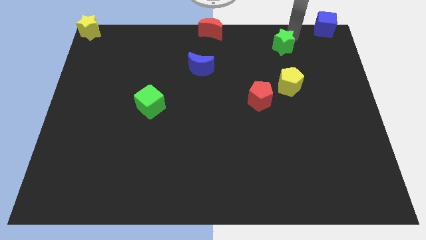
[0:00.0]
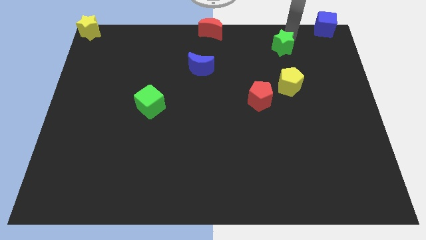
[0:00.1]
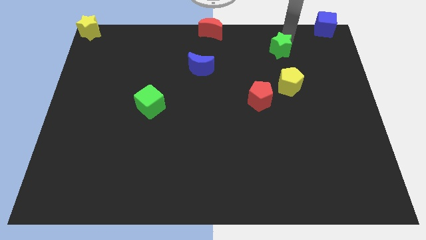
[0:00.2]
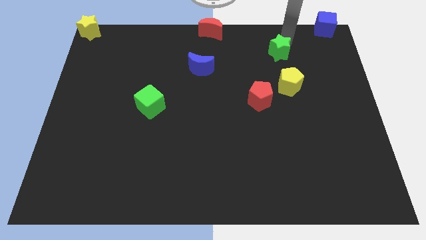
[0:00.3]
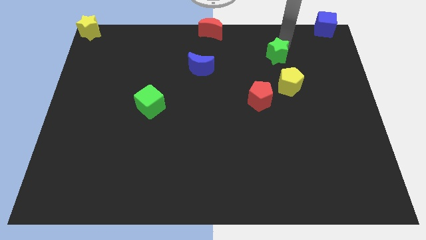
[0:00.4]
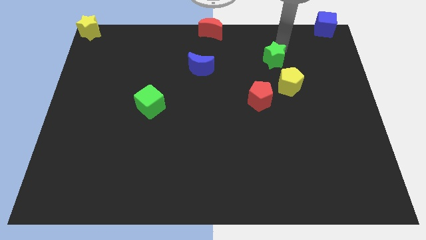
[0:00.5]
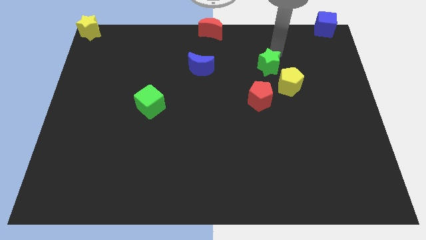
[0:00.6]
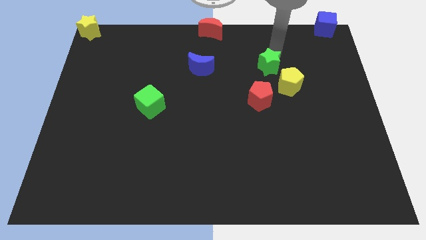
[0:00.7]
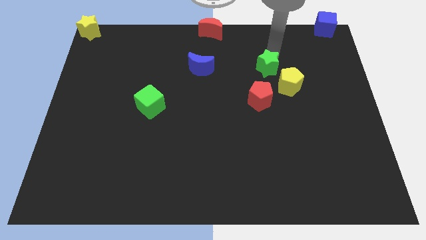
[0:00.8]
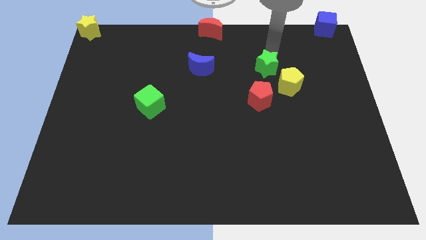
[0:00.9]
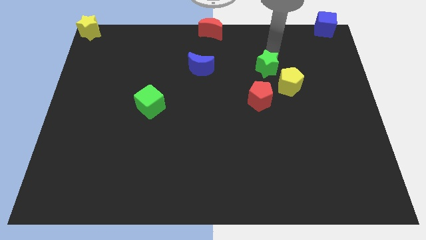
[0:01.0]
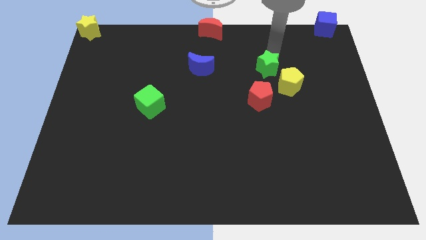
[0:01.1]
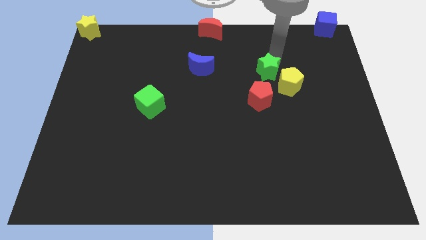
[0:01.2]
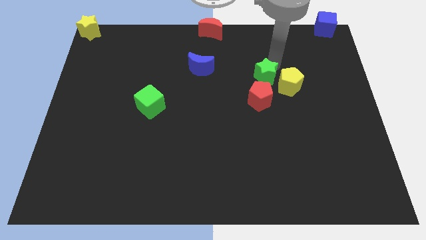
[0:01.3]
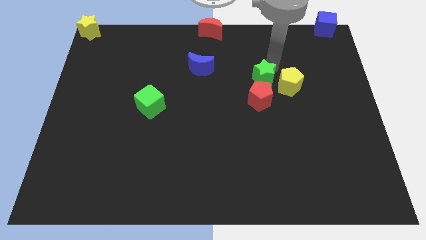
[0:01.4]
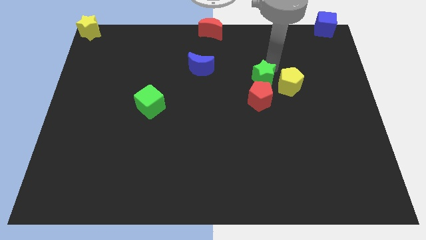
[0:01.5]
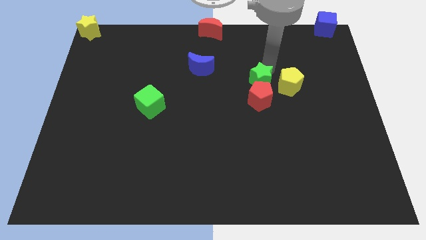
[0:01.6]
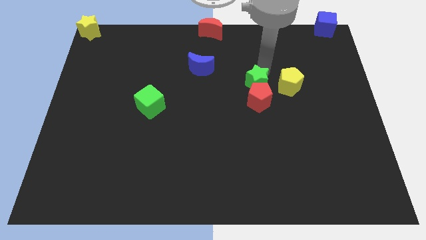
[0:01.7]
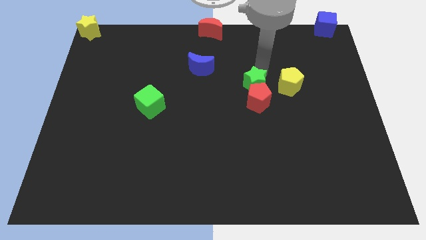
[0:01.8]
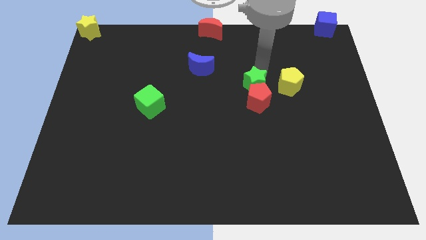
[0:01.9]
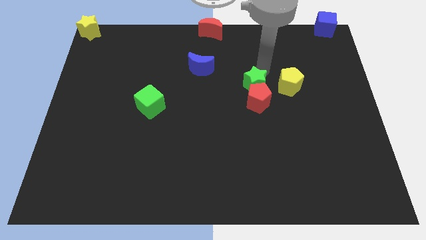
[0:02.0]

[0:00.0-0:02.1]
put the green star into the red pentagon

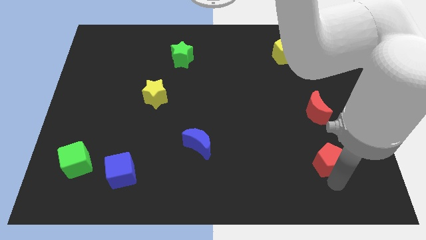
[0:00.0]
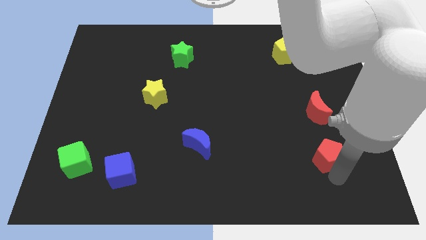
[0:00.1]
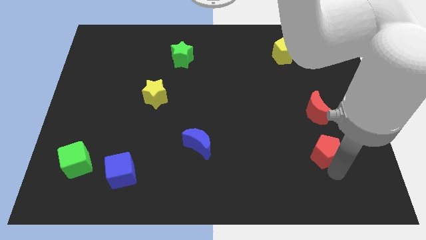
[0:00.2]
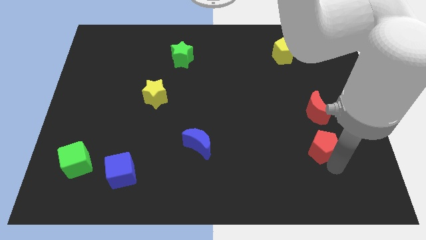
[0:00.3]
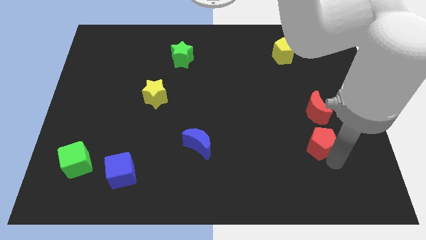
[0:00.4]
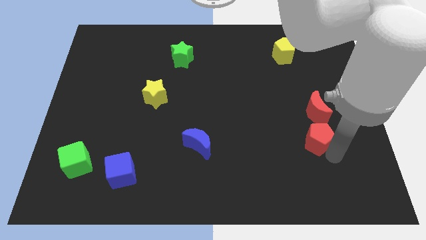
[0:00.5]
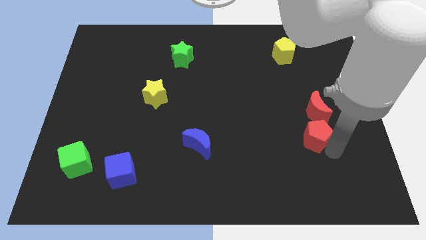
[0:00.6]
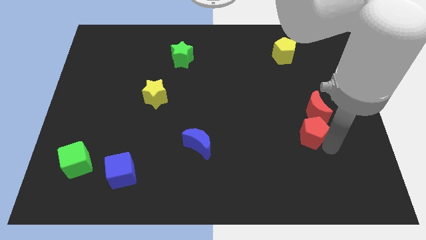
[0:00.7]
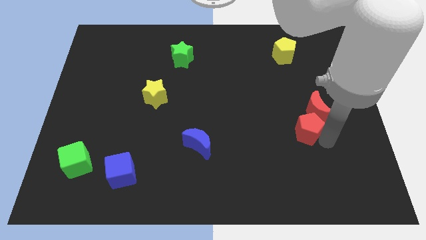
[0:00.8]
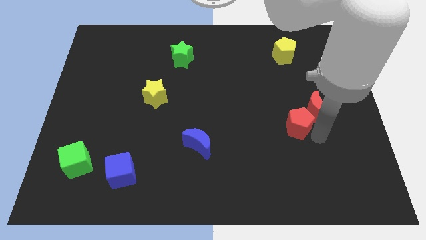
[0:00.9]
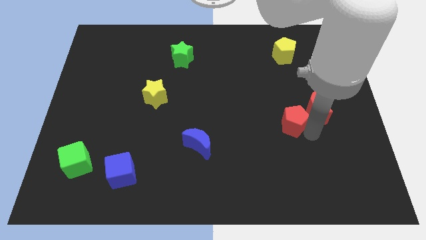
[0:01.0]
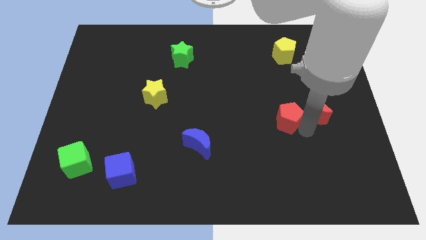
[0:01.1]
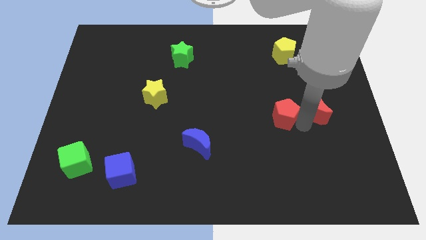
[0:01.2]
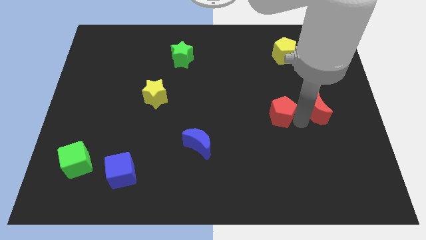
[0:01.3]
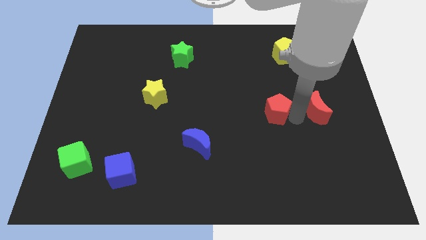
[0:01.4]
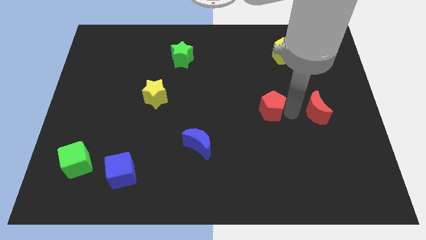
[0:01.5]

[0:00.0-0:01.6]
move the red pentagon to the left of the red crescent

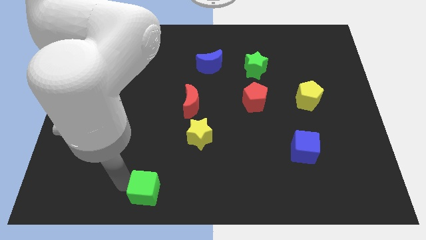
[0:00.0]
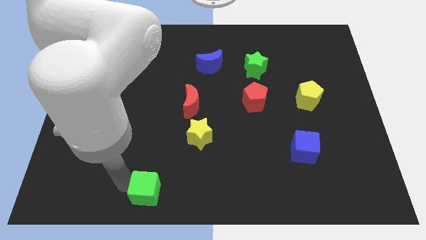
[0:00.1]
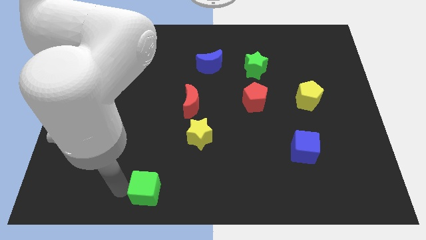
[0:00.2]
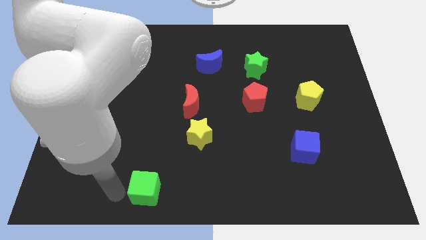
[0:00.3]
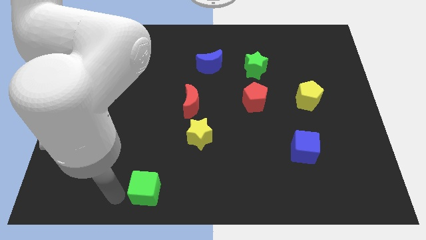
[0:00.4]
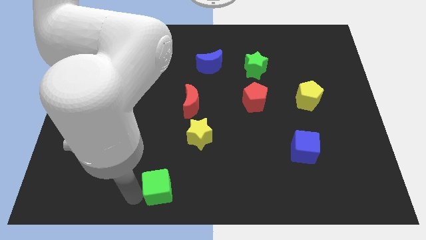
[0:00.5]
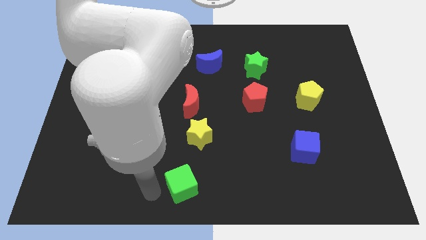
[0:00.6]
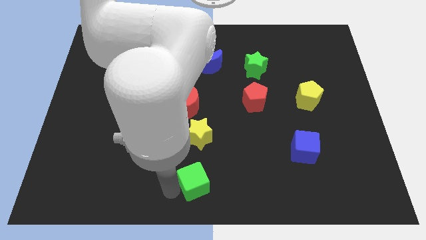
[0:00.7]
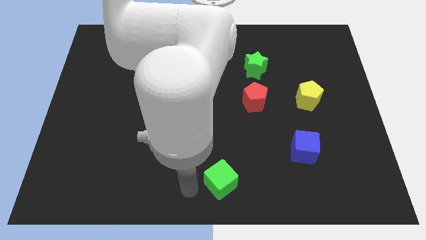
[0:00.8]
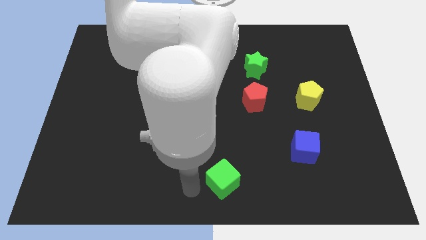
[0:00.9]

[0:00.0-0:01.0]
move the green cube to the bottom center

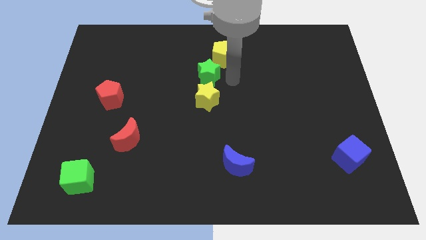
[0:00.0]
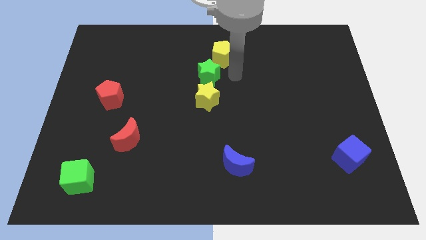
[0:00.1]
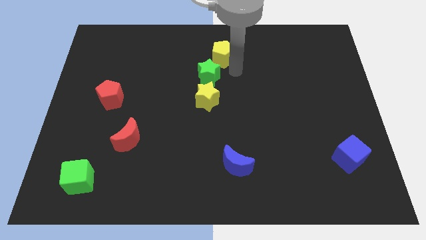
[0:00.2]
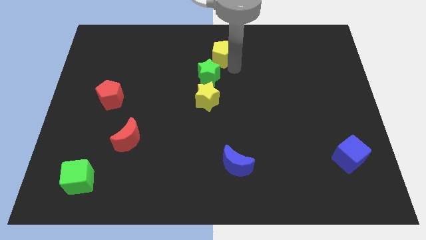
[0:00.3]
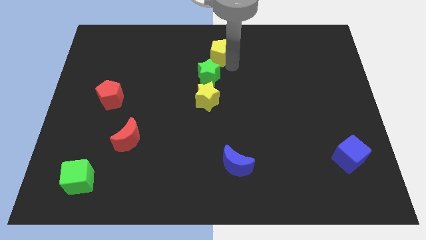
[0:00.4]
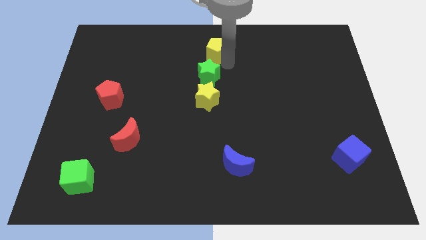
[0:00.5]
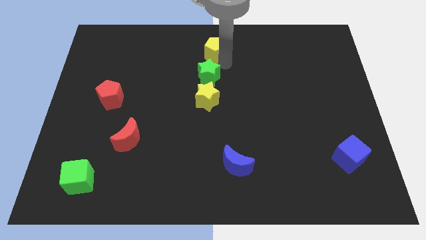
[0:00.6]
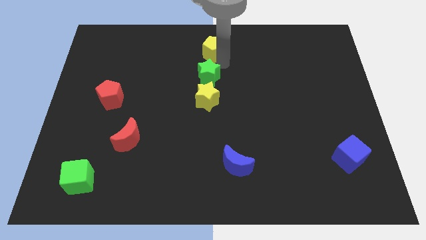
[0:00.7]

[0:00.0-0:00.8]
slightly move the yellow pentagon top center of the board

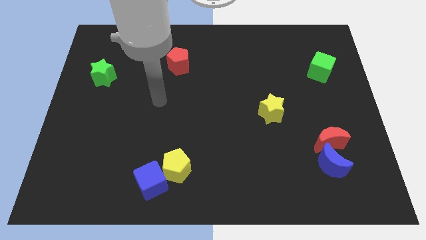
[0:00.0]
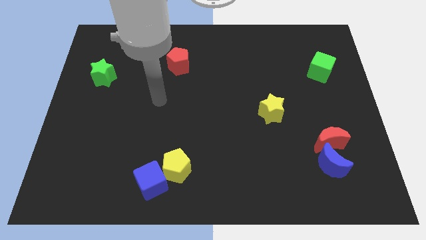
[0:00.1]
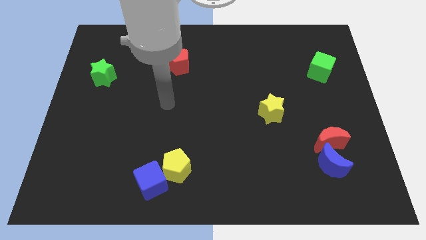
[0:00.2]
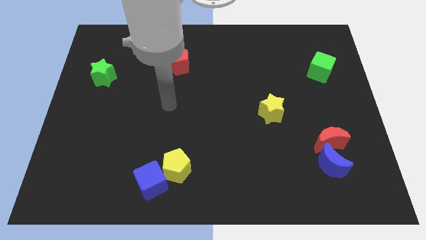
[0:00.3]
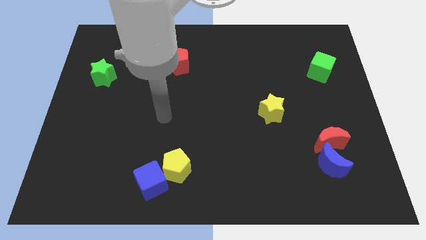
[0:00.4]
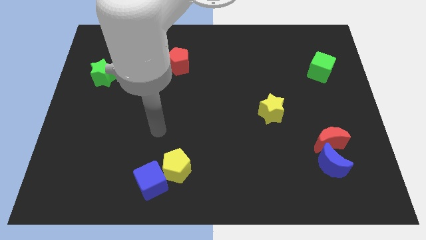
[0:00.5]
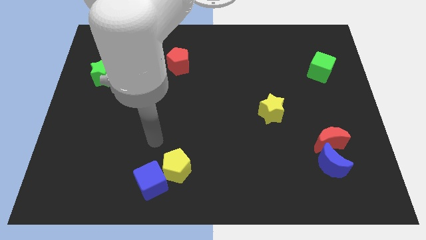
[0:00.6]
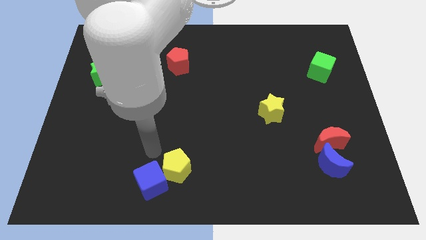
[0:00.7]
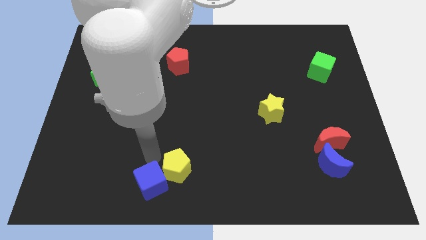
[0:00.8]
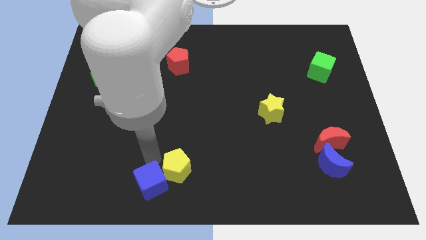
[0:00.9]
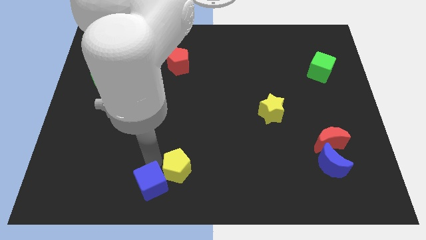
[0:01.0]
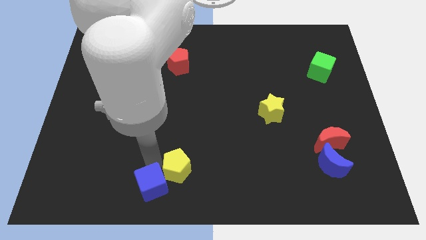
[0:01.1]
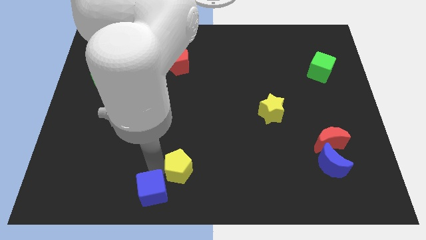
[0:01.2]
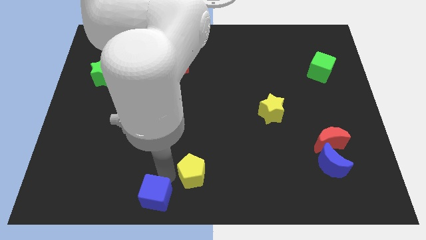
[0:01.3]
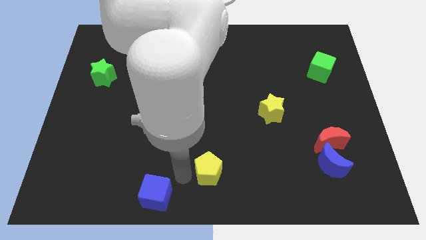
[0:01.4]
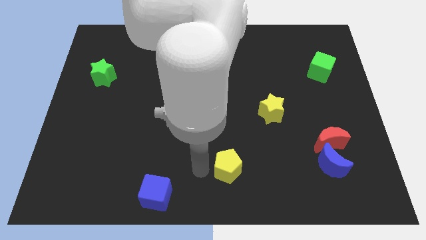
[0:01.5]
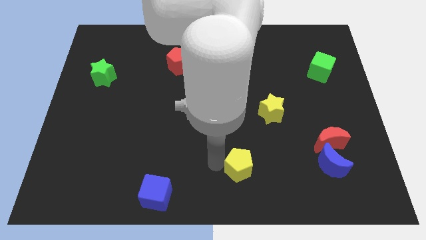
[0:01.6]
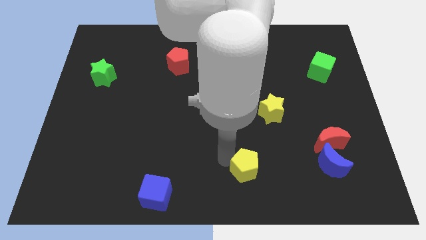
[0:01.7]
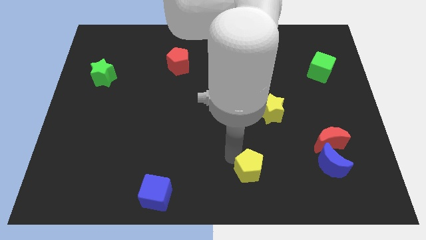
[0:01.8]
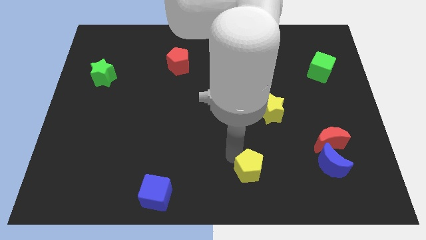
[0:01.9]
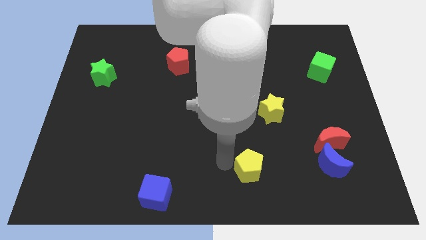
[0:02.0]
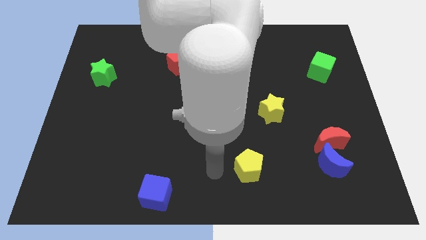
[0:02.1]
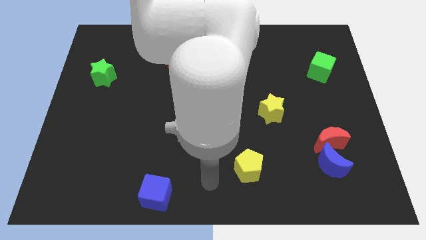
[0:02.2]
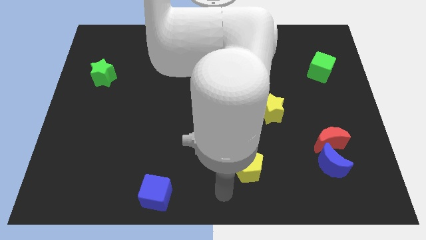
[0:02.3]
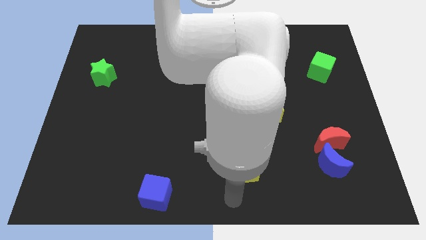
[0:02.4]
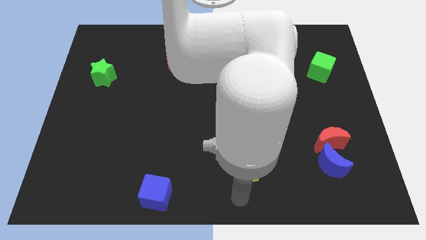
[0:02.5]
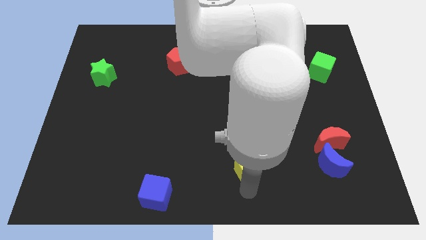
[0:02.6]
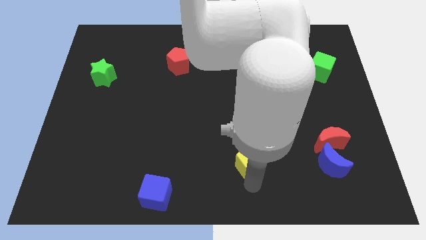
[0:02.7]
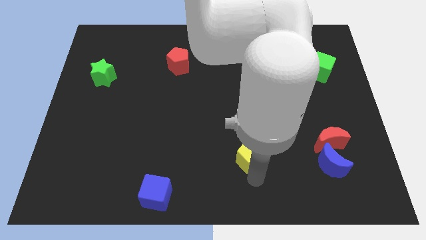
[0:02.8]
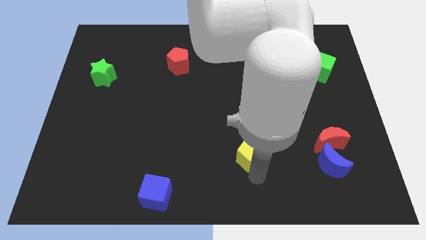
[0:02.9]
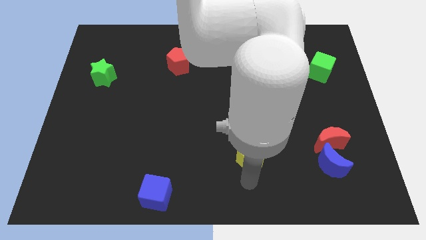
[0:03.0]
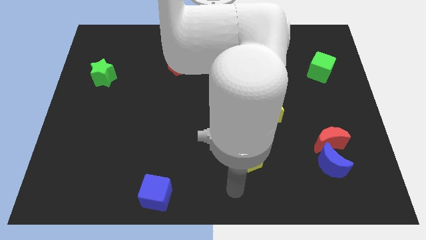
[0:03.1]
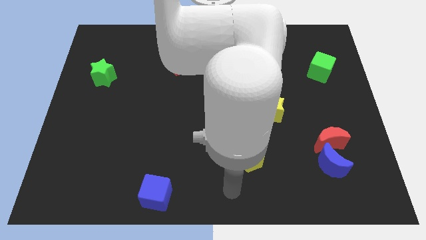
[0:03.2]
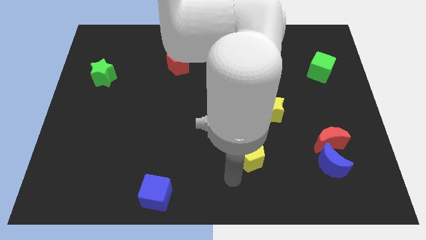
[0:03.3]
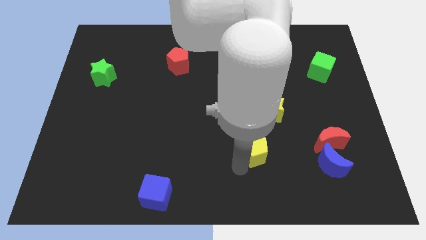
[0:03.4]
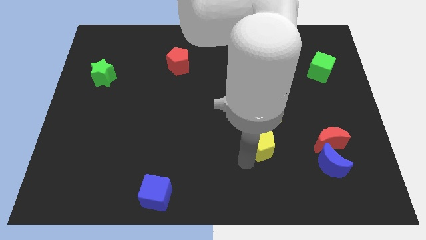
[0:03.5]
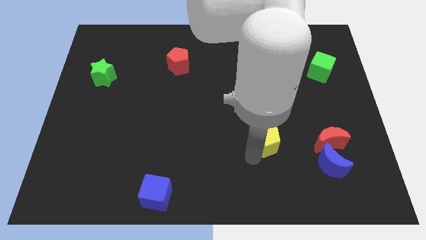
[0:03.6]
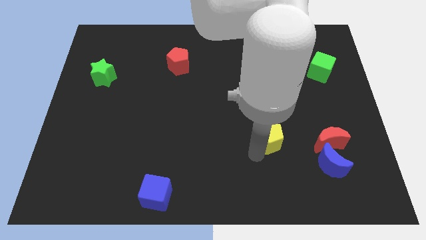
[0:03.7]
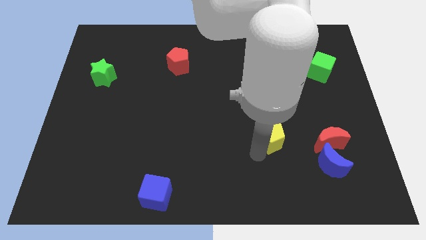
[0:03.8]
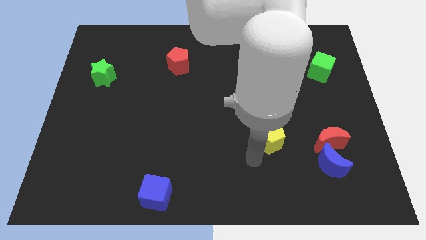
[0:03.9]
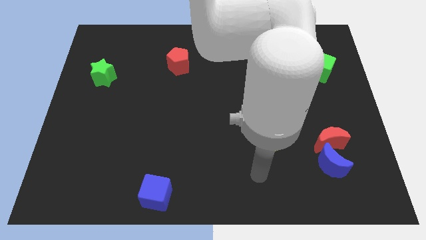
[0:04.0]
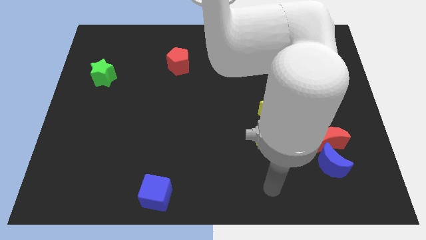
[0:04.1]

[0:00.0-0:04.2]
separate blue cube and yellow pentagon
